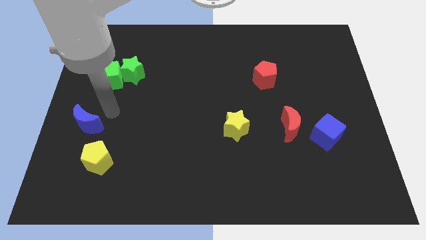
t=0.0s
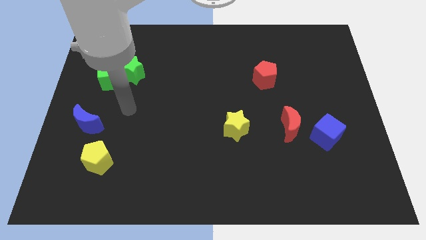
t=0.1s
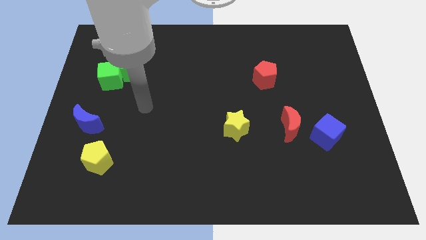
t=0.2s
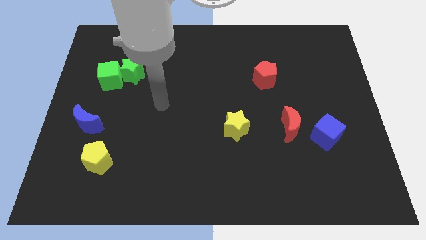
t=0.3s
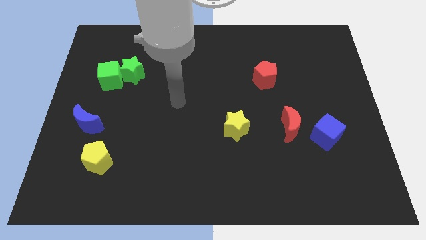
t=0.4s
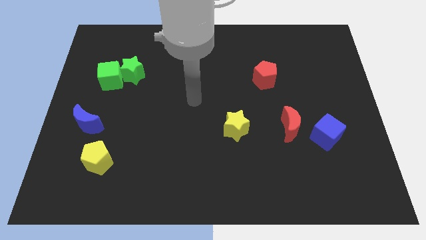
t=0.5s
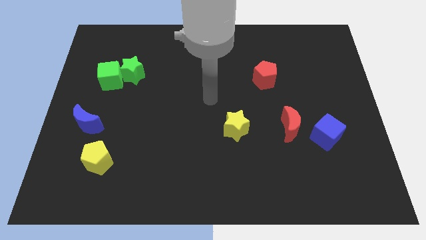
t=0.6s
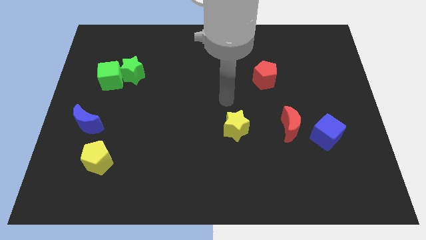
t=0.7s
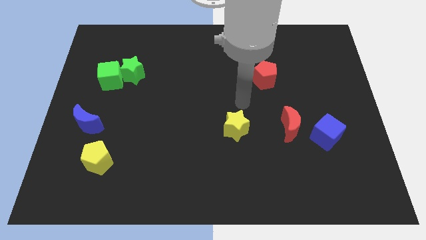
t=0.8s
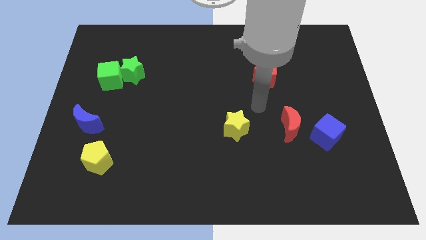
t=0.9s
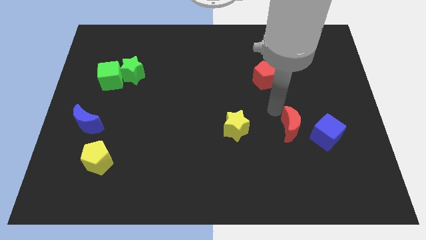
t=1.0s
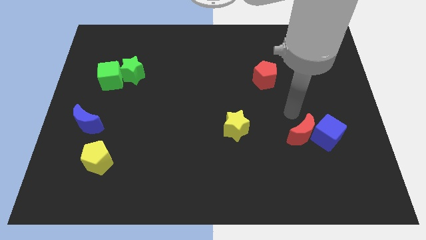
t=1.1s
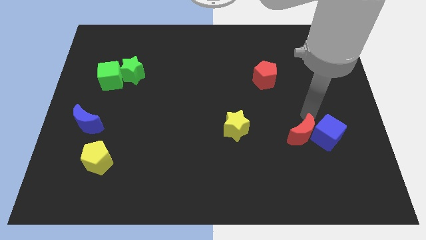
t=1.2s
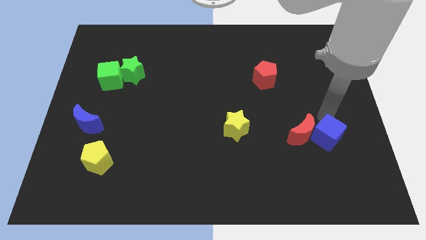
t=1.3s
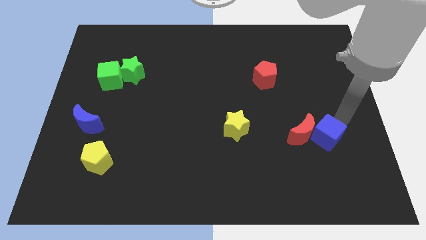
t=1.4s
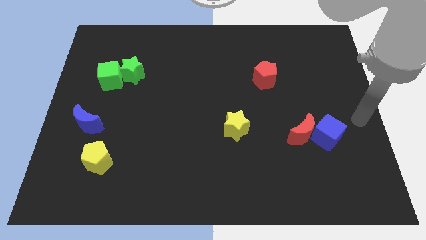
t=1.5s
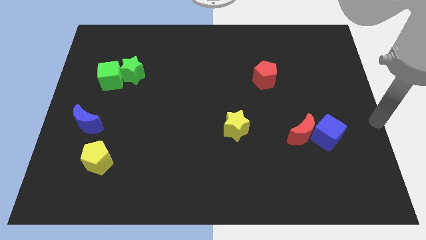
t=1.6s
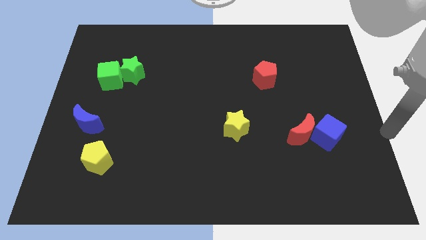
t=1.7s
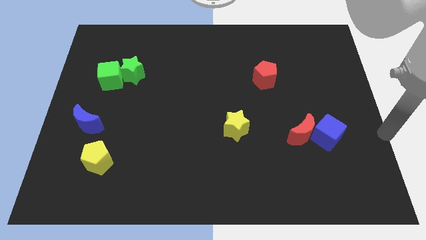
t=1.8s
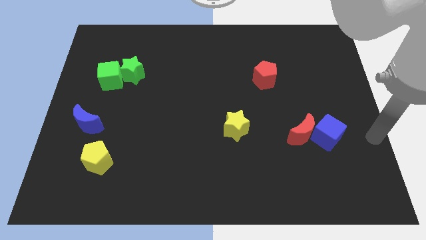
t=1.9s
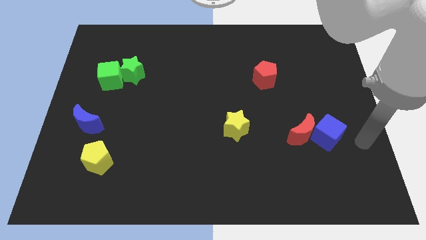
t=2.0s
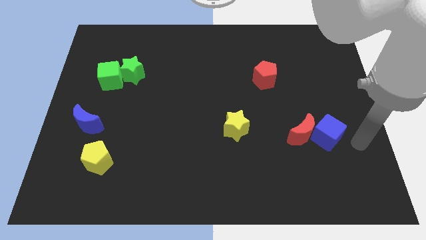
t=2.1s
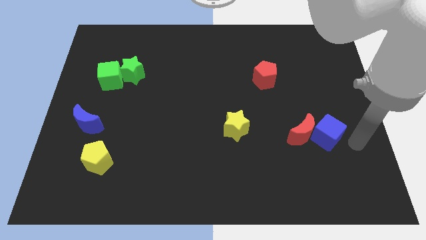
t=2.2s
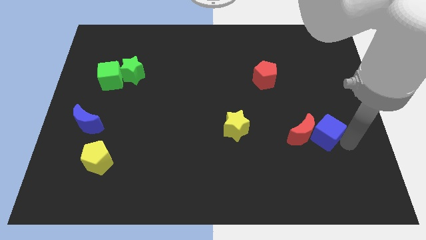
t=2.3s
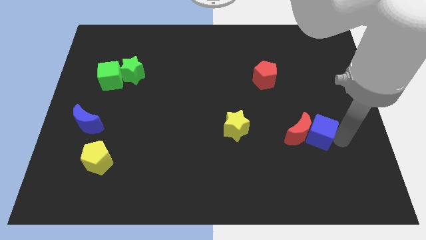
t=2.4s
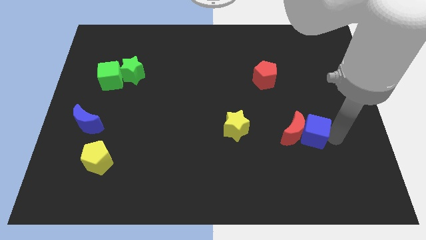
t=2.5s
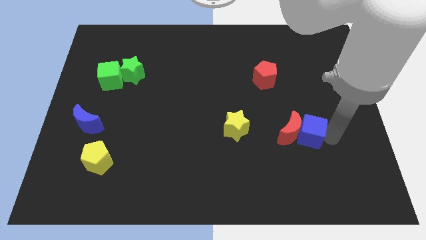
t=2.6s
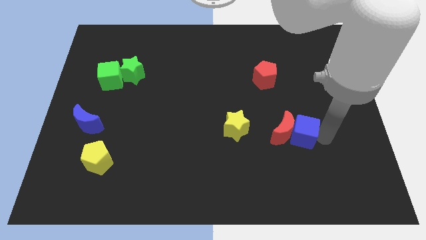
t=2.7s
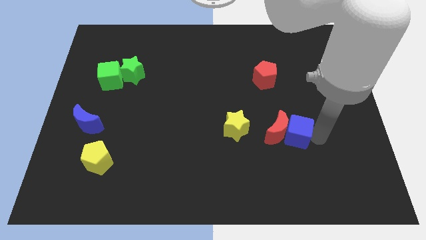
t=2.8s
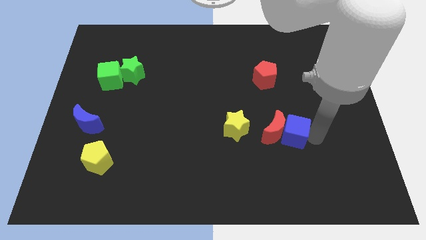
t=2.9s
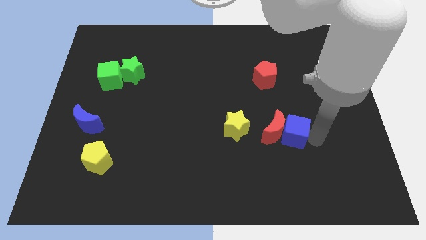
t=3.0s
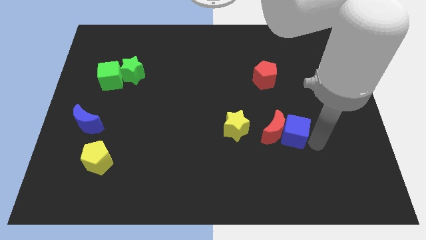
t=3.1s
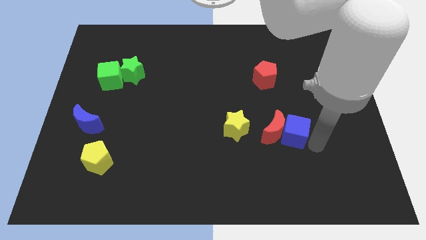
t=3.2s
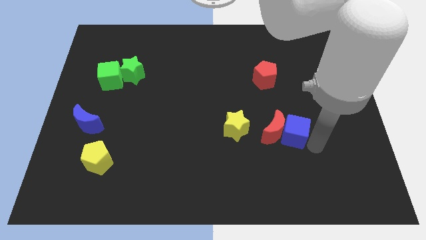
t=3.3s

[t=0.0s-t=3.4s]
move the blue cube along with the red crescent slightly to the left

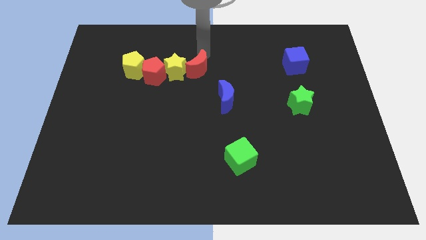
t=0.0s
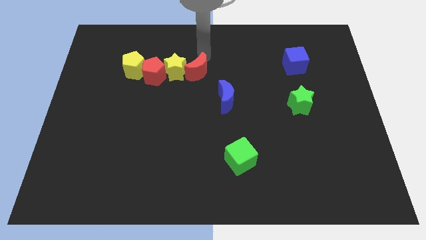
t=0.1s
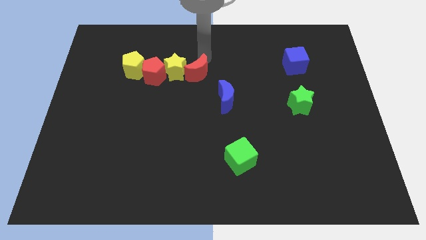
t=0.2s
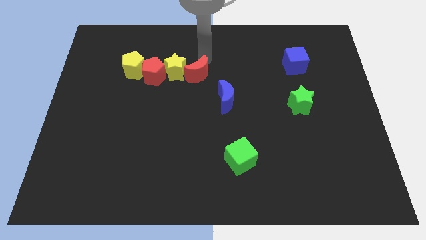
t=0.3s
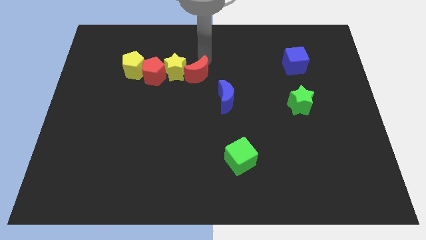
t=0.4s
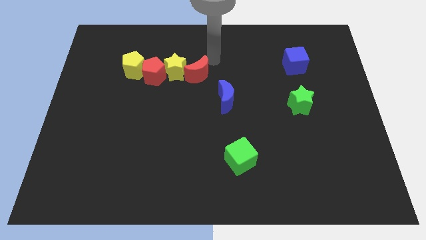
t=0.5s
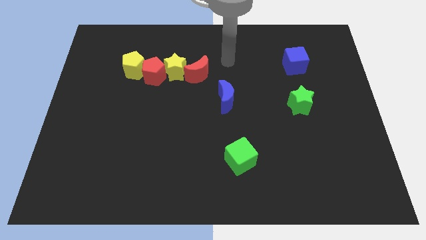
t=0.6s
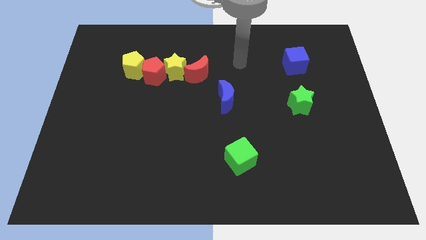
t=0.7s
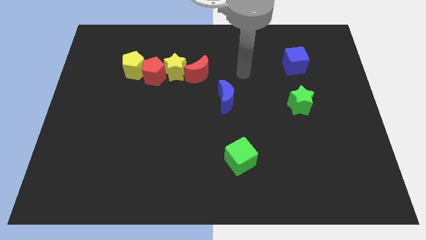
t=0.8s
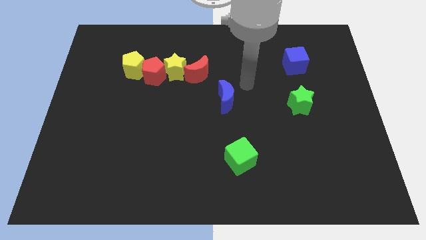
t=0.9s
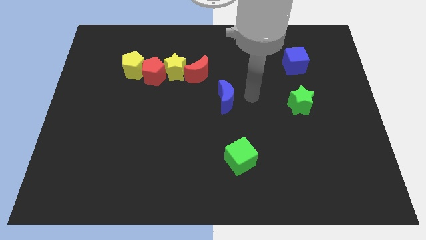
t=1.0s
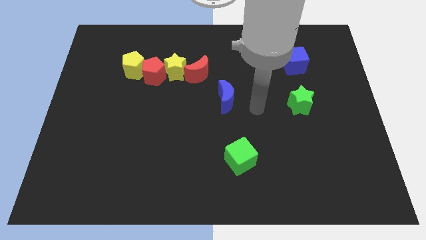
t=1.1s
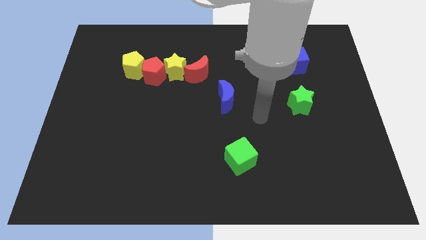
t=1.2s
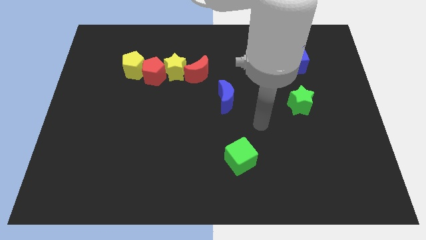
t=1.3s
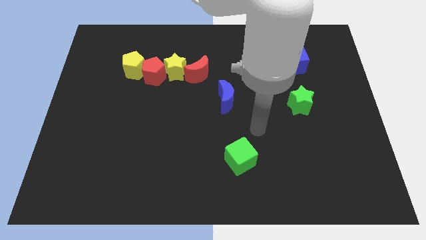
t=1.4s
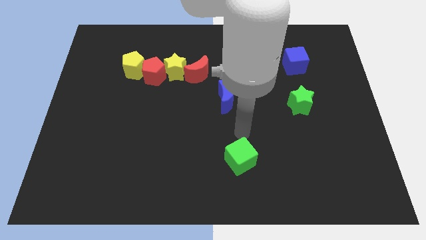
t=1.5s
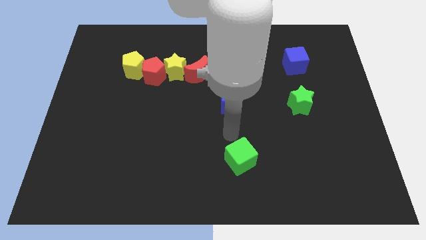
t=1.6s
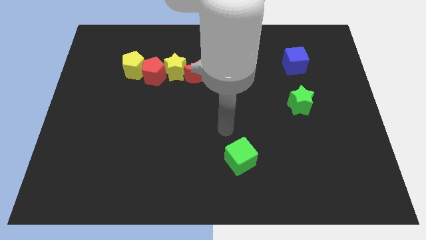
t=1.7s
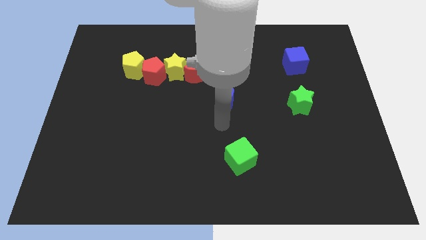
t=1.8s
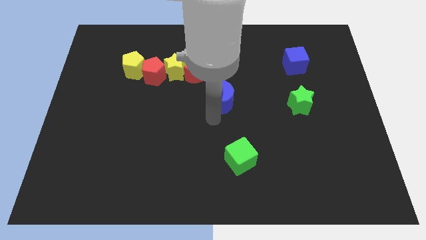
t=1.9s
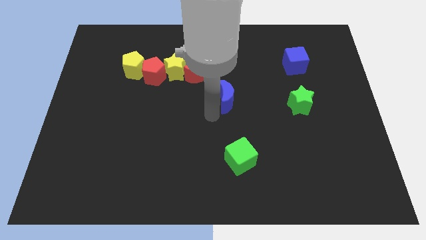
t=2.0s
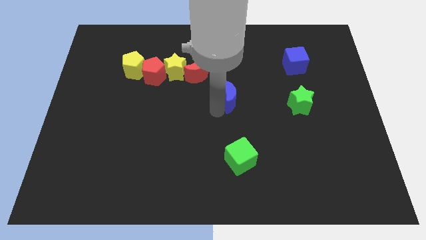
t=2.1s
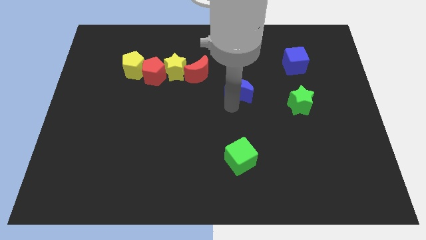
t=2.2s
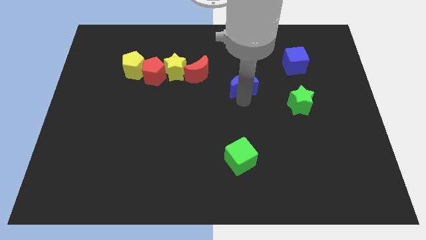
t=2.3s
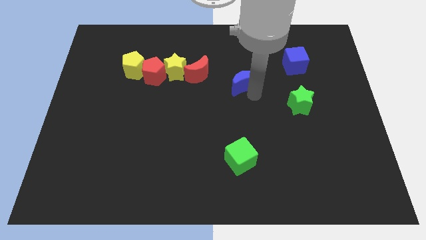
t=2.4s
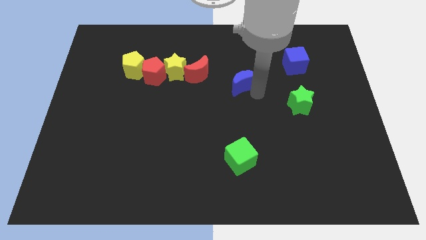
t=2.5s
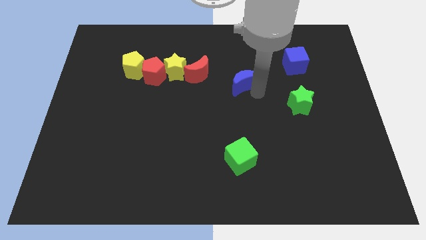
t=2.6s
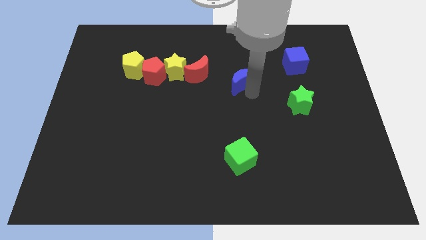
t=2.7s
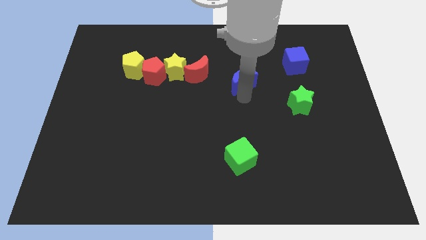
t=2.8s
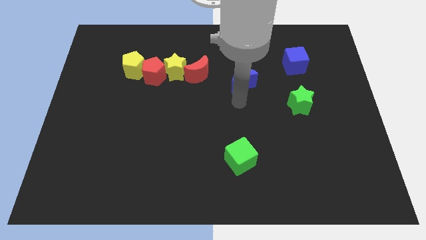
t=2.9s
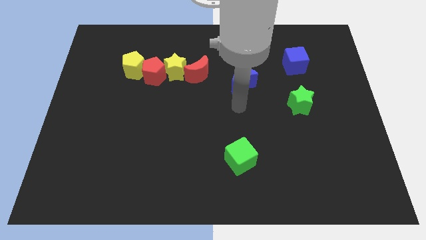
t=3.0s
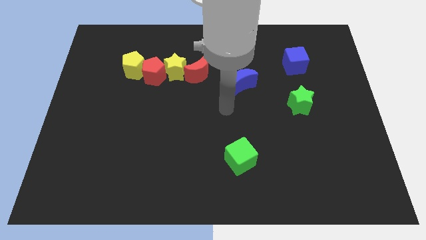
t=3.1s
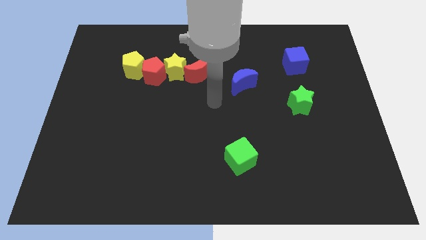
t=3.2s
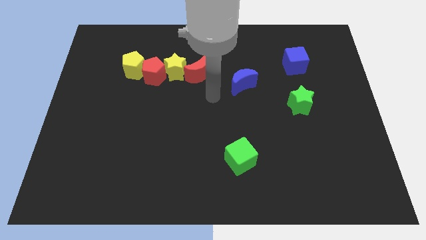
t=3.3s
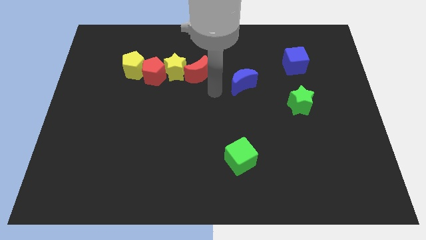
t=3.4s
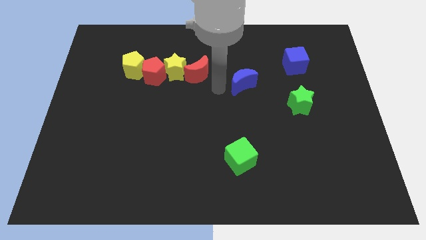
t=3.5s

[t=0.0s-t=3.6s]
slightly move the blue moon up

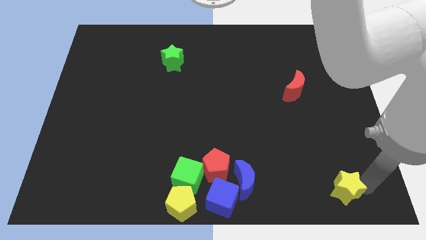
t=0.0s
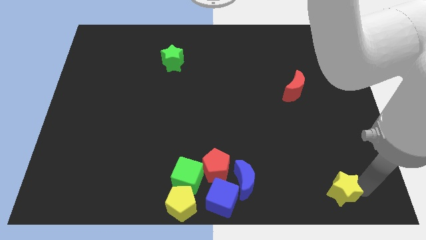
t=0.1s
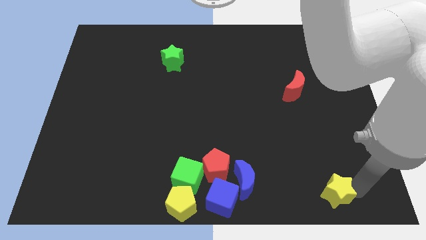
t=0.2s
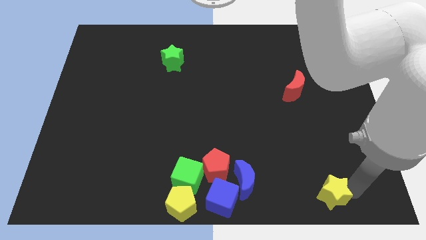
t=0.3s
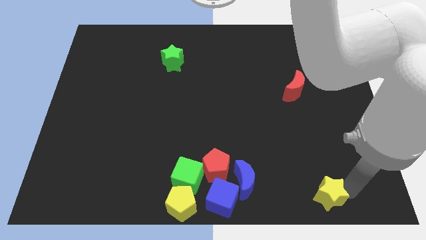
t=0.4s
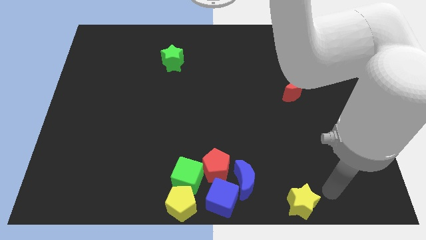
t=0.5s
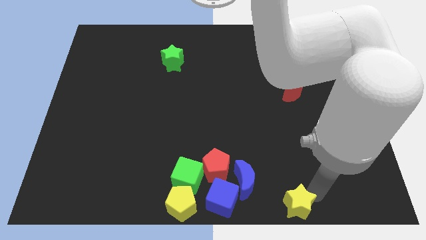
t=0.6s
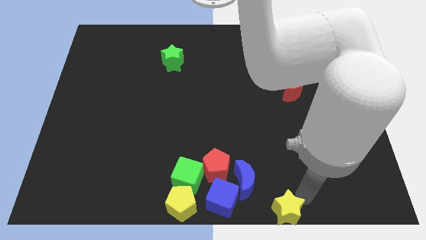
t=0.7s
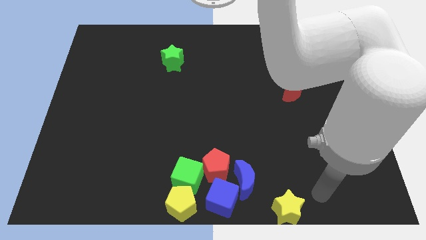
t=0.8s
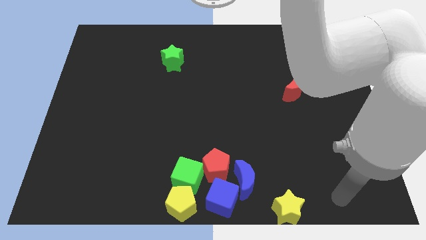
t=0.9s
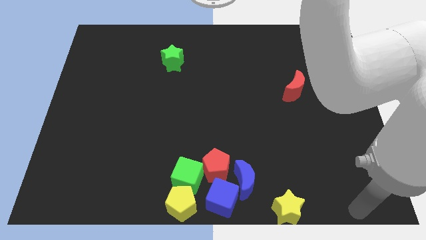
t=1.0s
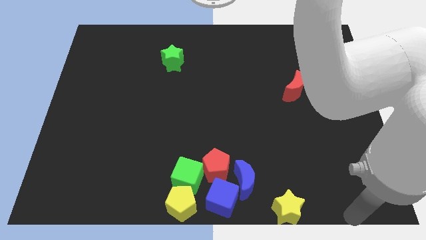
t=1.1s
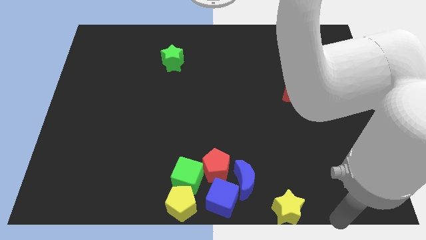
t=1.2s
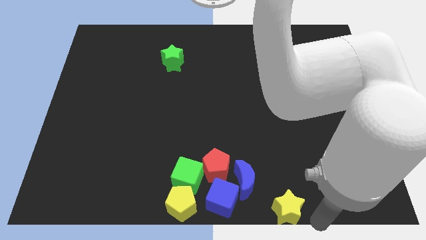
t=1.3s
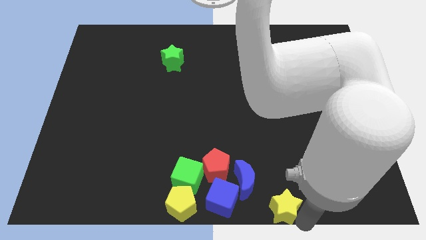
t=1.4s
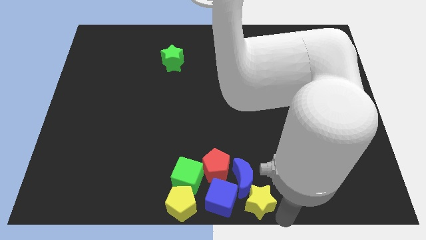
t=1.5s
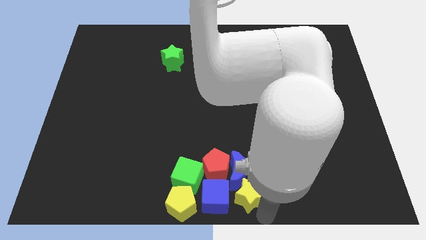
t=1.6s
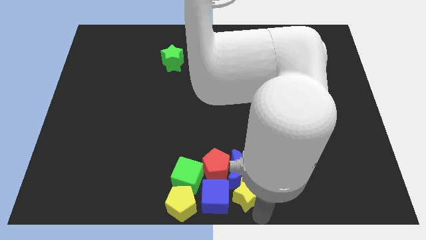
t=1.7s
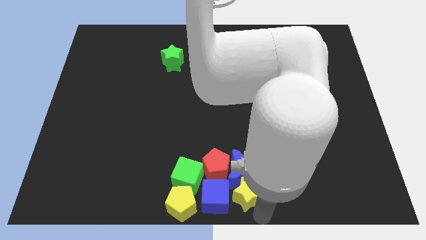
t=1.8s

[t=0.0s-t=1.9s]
place yellow star below blue crescent
